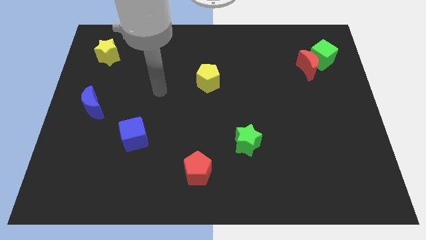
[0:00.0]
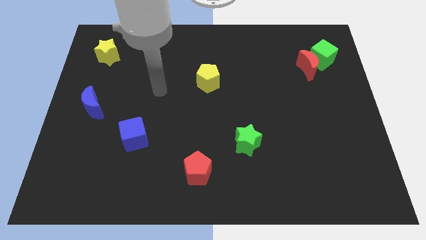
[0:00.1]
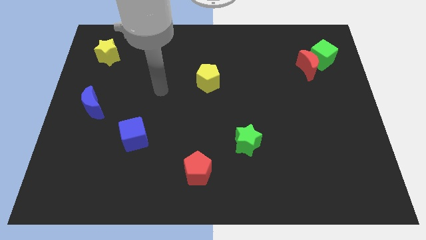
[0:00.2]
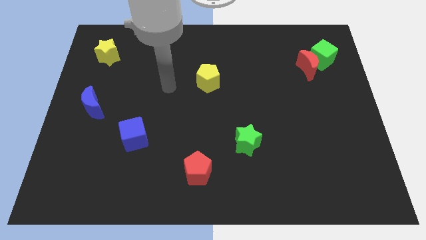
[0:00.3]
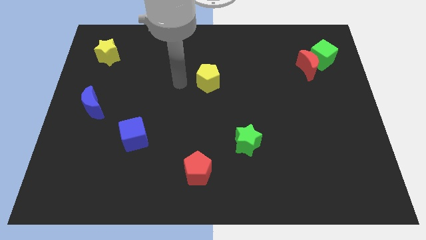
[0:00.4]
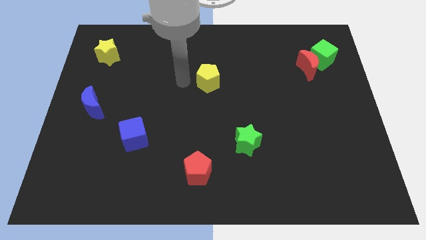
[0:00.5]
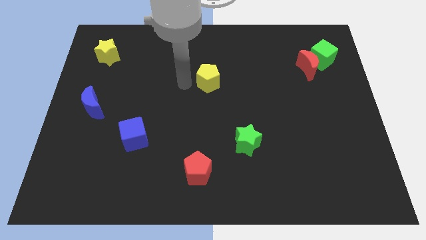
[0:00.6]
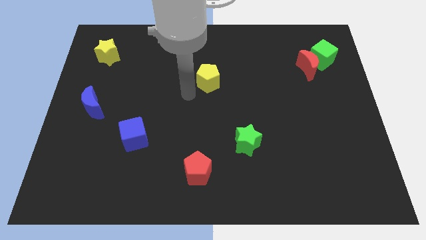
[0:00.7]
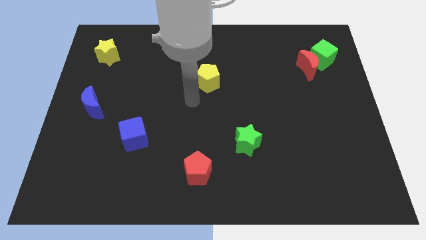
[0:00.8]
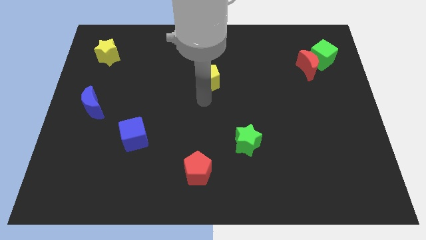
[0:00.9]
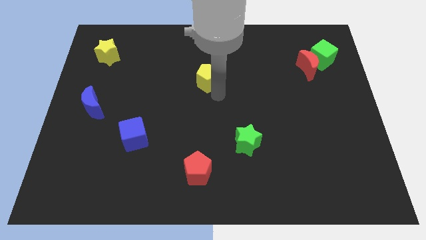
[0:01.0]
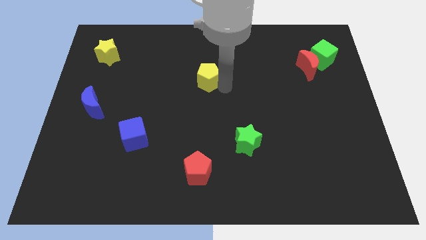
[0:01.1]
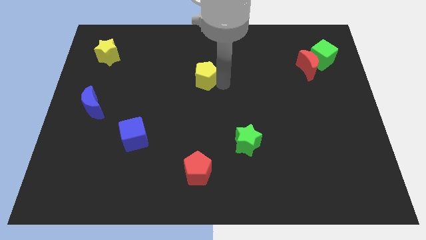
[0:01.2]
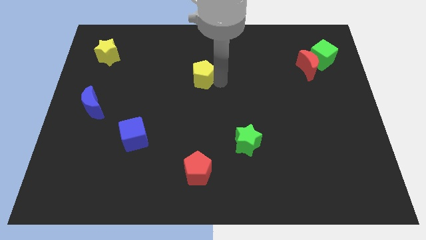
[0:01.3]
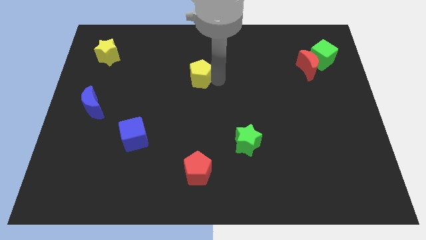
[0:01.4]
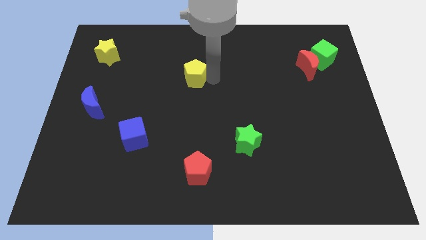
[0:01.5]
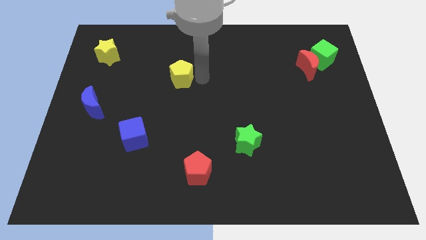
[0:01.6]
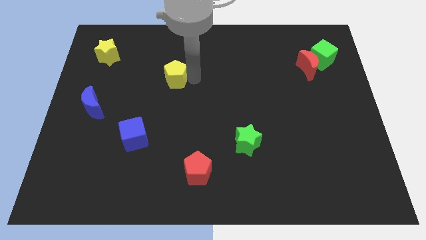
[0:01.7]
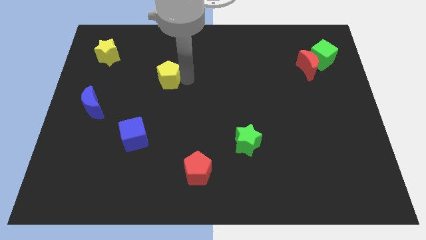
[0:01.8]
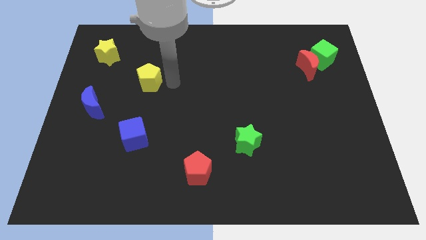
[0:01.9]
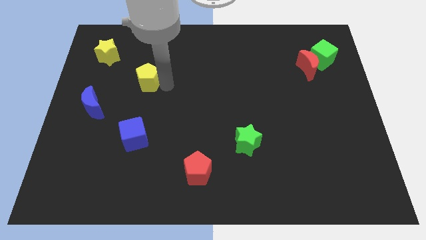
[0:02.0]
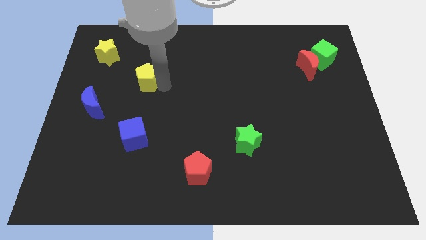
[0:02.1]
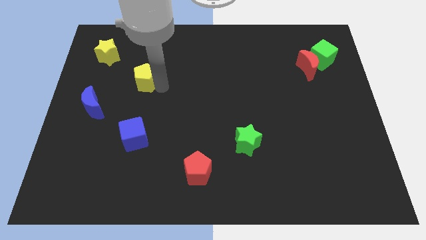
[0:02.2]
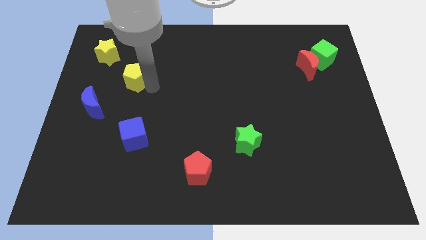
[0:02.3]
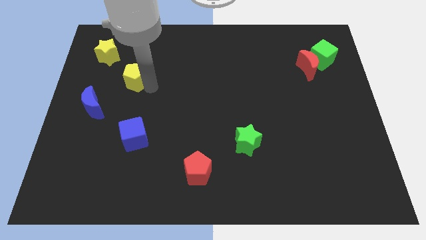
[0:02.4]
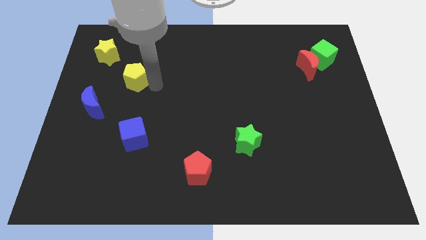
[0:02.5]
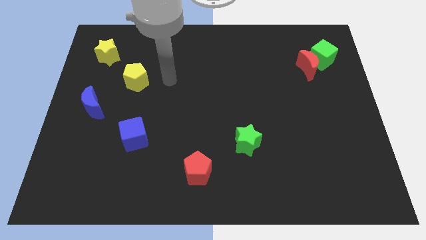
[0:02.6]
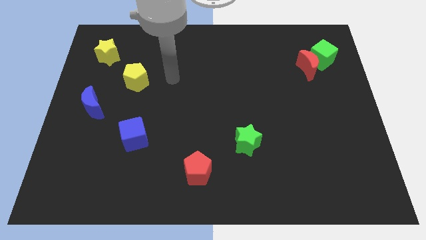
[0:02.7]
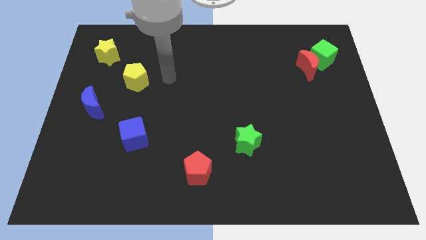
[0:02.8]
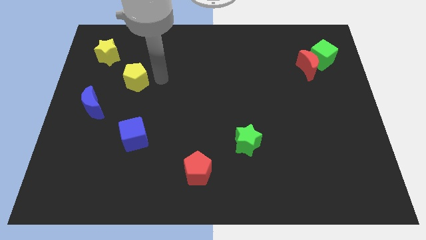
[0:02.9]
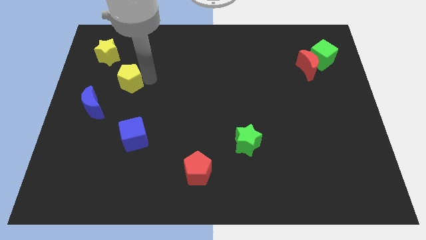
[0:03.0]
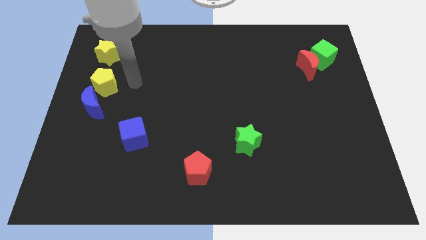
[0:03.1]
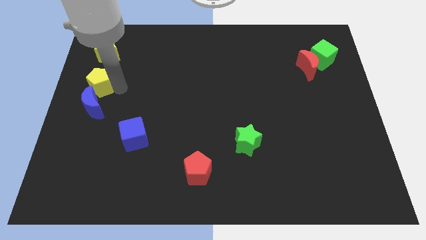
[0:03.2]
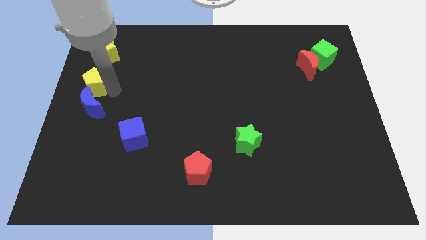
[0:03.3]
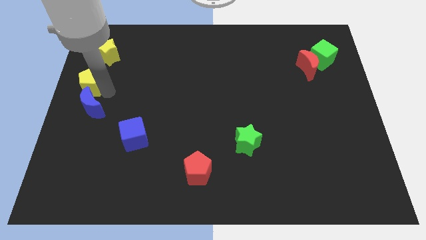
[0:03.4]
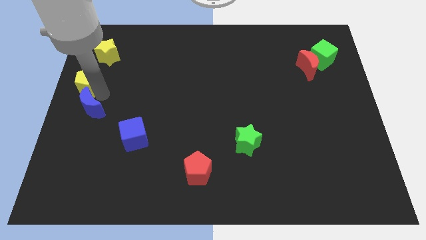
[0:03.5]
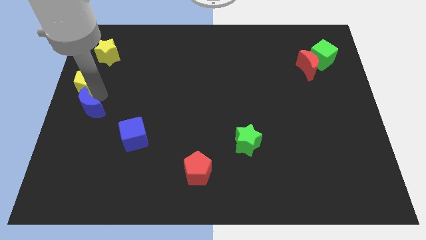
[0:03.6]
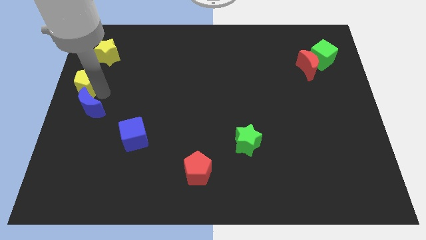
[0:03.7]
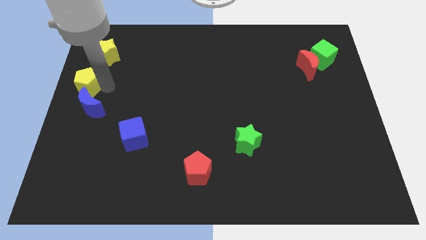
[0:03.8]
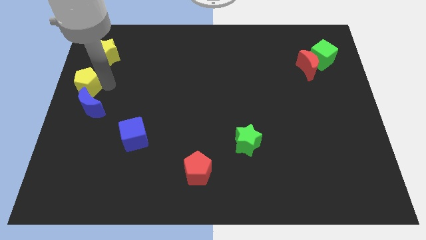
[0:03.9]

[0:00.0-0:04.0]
place yellow pentagon to the top of blue crescent

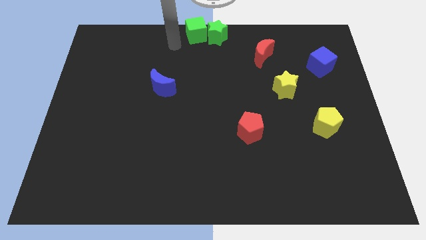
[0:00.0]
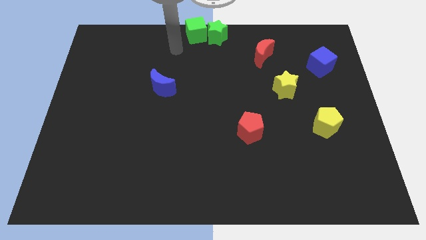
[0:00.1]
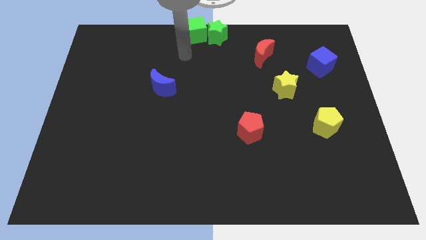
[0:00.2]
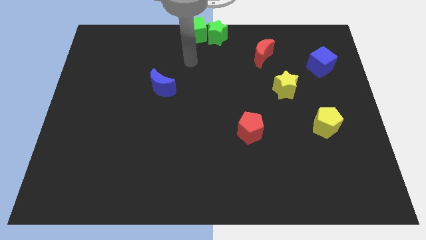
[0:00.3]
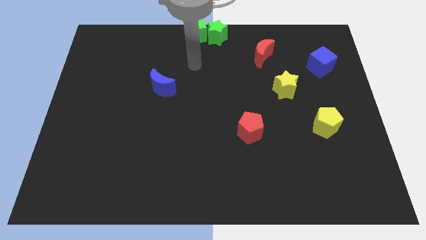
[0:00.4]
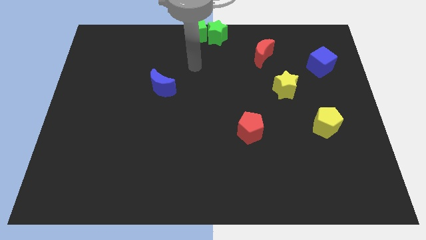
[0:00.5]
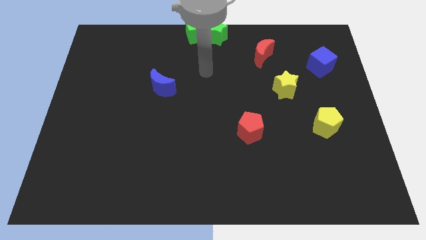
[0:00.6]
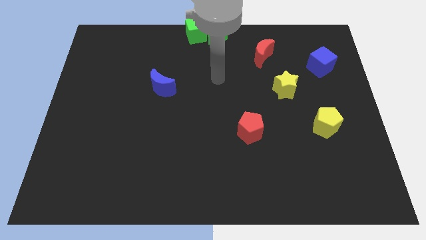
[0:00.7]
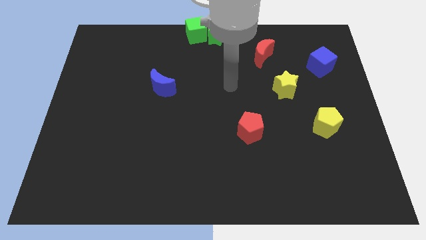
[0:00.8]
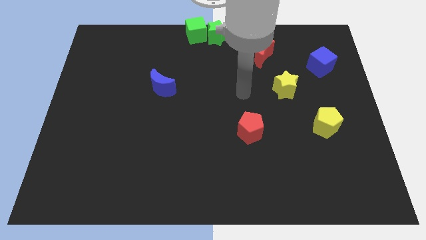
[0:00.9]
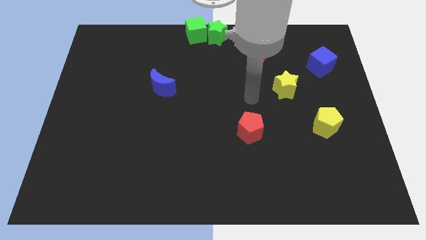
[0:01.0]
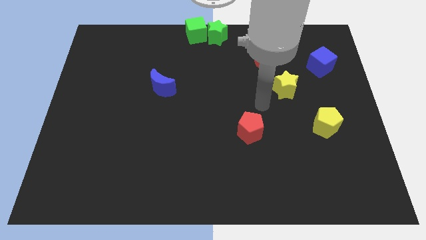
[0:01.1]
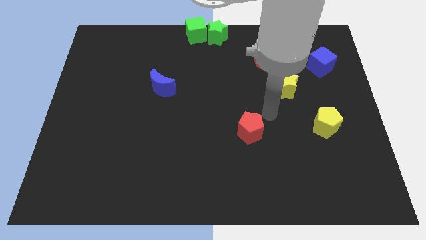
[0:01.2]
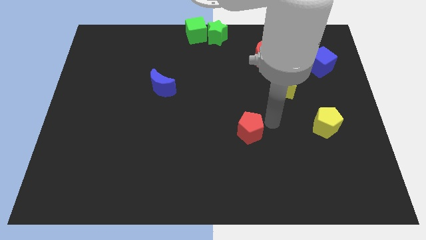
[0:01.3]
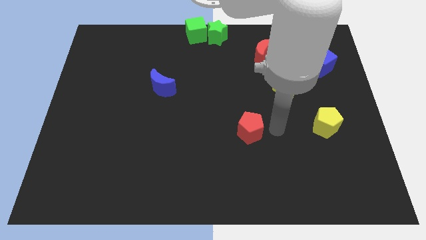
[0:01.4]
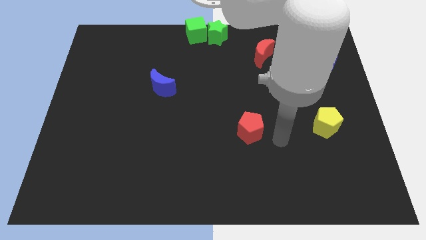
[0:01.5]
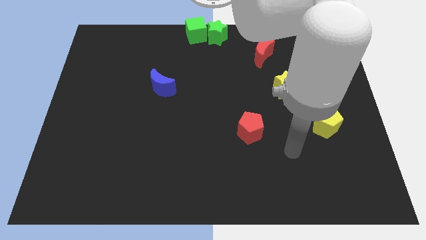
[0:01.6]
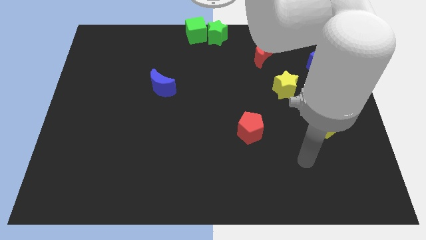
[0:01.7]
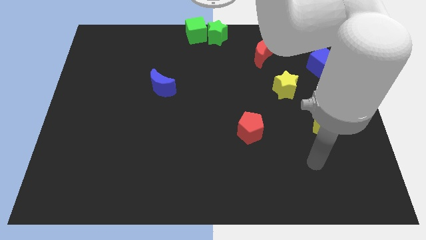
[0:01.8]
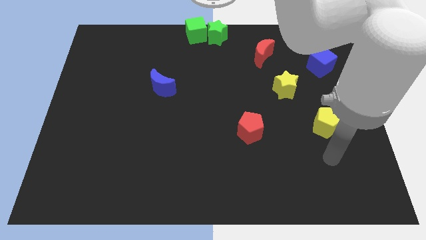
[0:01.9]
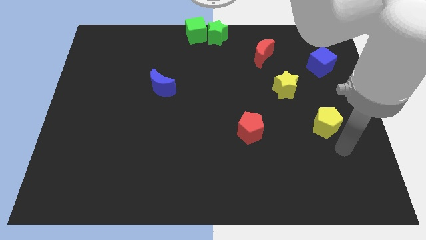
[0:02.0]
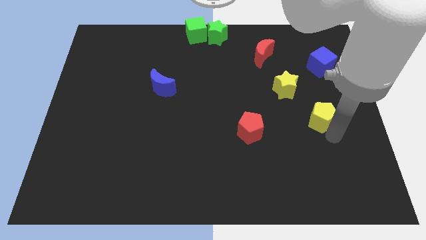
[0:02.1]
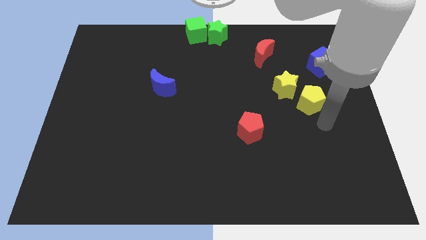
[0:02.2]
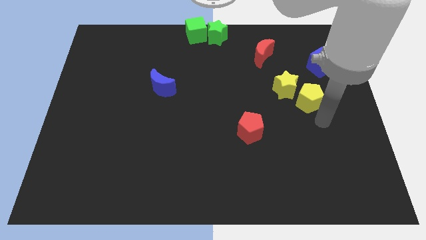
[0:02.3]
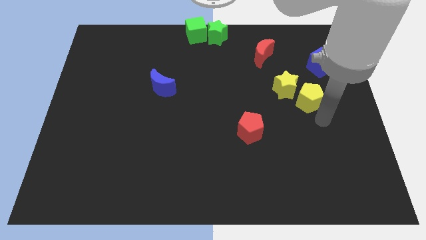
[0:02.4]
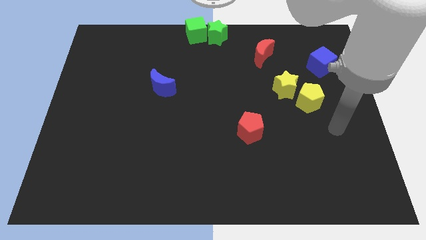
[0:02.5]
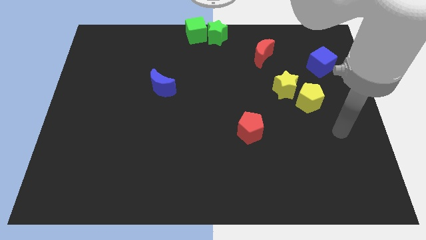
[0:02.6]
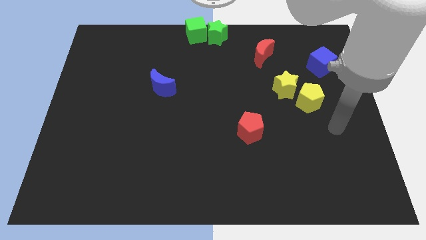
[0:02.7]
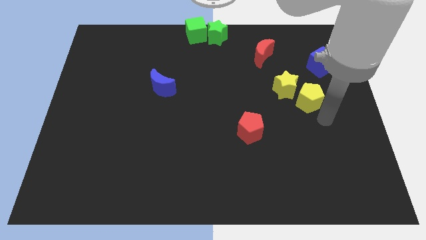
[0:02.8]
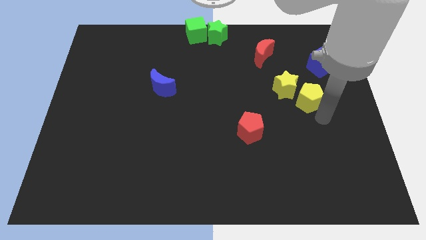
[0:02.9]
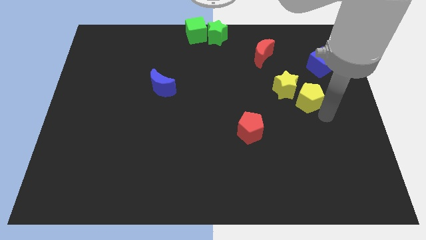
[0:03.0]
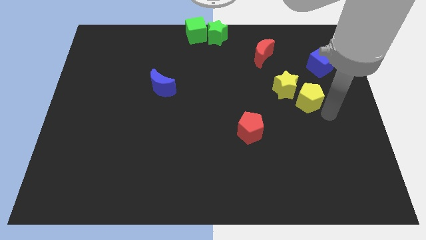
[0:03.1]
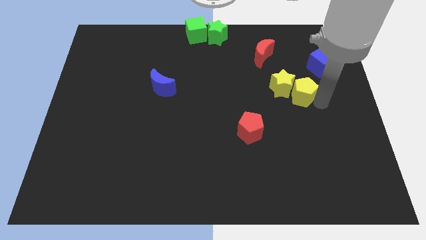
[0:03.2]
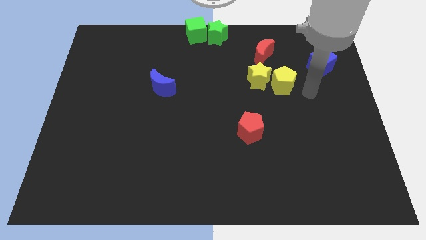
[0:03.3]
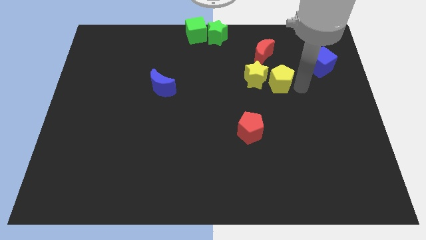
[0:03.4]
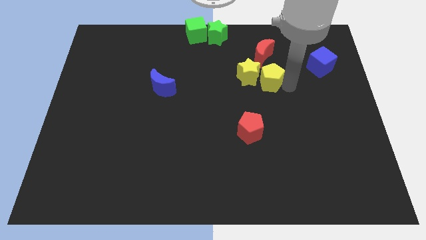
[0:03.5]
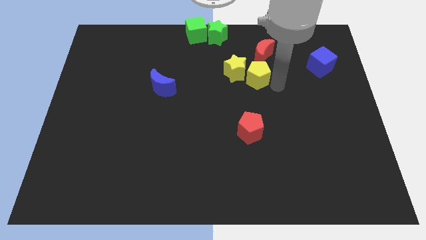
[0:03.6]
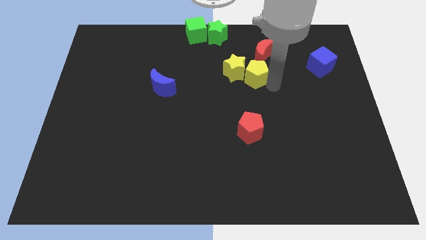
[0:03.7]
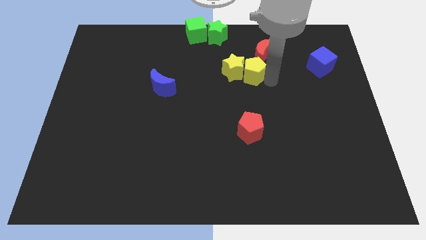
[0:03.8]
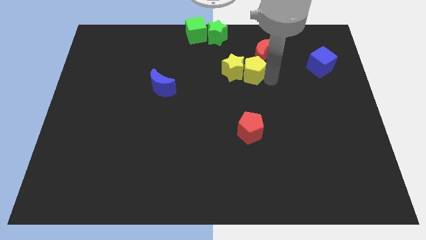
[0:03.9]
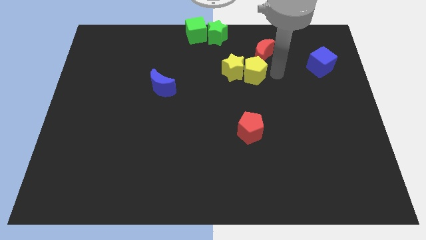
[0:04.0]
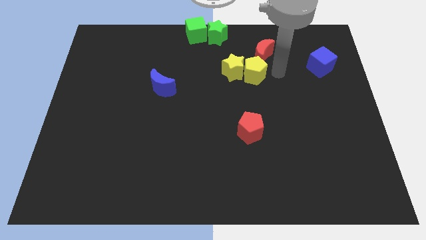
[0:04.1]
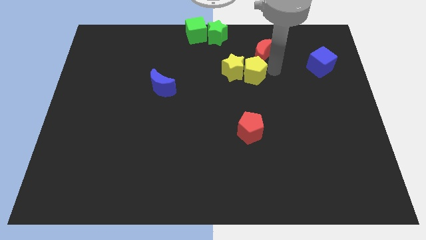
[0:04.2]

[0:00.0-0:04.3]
push the yellow pentagon with yellow star to the top center of the board

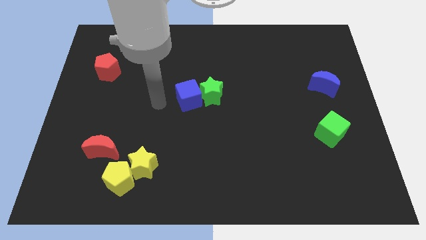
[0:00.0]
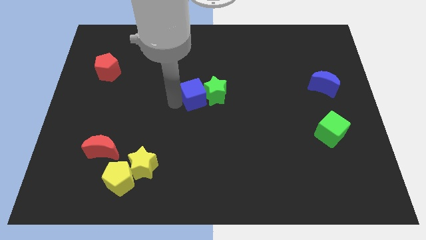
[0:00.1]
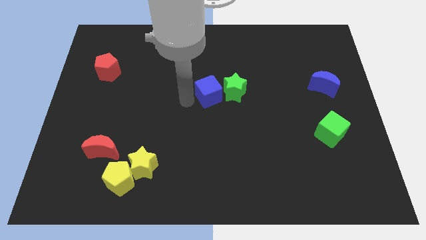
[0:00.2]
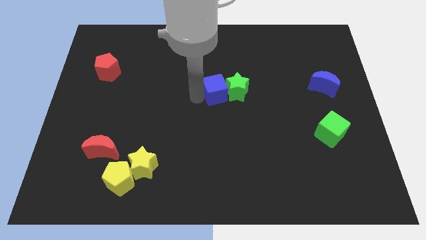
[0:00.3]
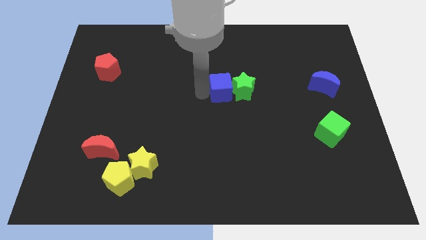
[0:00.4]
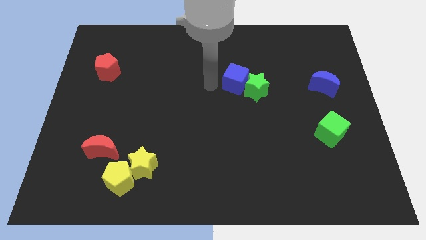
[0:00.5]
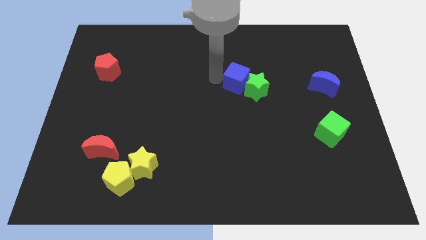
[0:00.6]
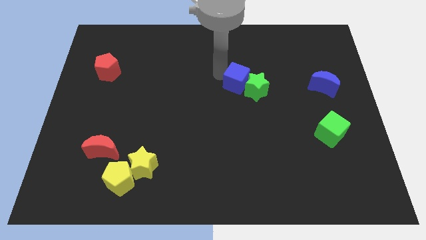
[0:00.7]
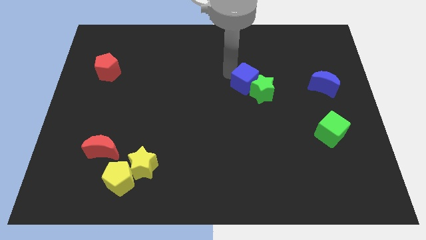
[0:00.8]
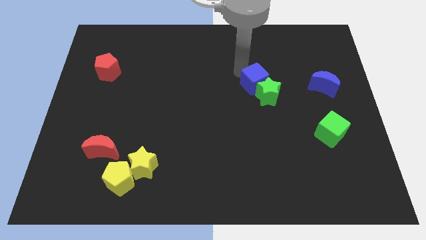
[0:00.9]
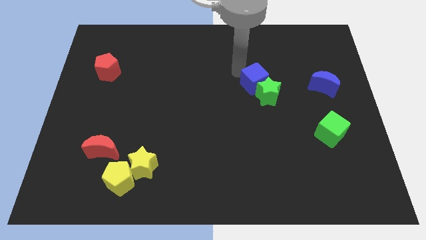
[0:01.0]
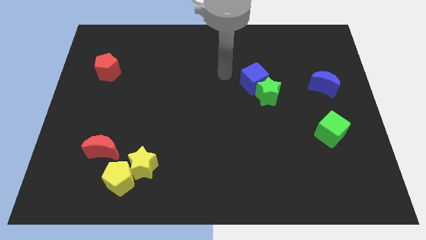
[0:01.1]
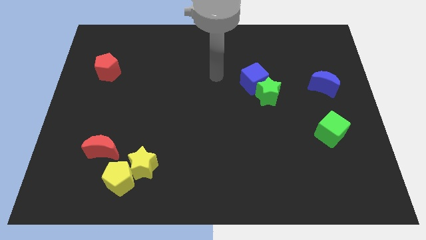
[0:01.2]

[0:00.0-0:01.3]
move the blue cube and green star to the center right
